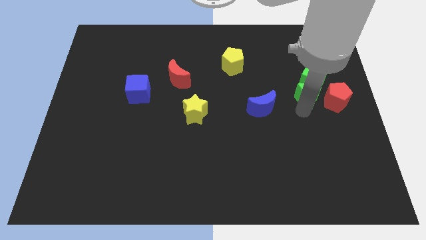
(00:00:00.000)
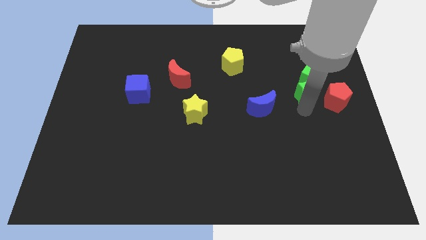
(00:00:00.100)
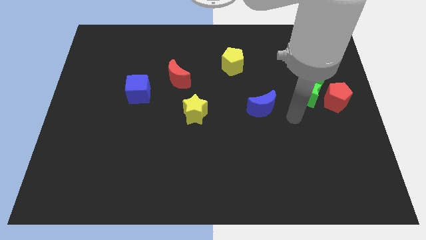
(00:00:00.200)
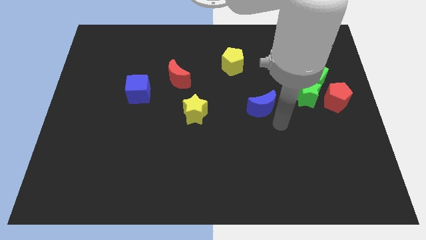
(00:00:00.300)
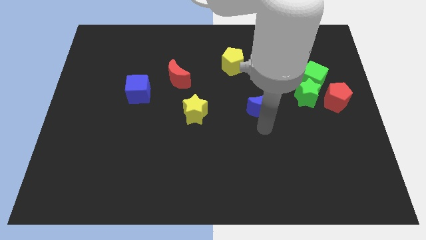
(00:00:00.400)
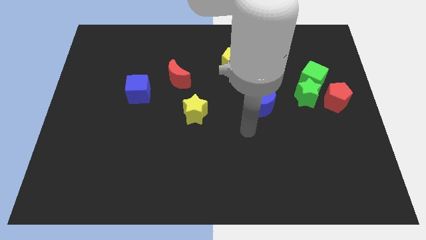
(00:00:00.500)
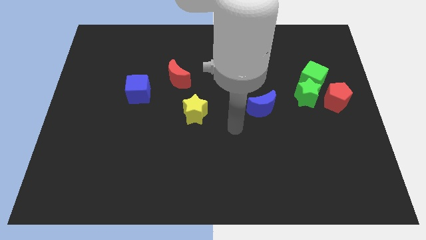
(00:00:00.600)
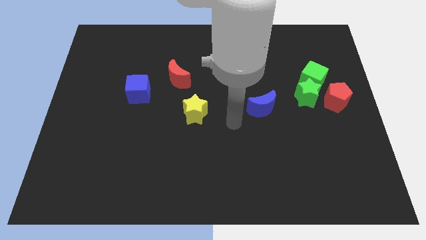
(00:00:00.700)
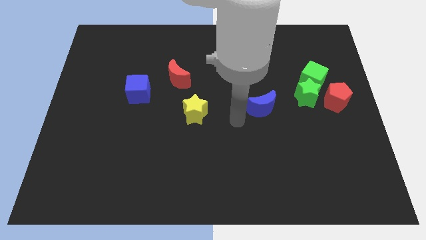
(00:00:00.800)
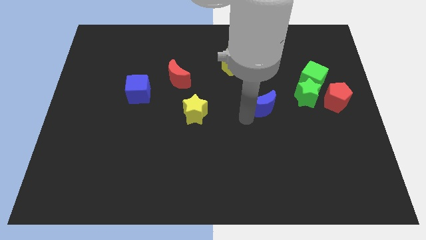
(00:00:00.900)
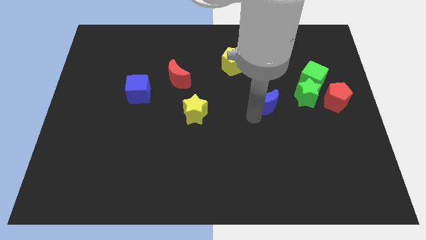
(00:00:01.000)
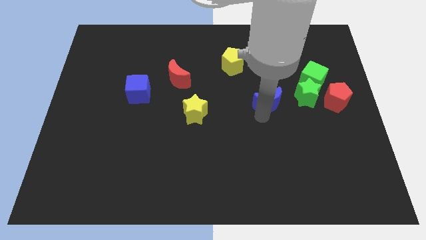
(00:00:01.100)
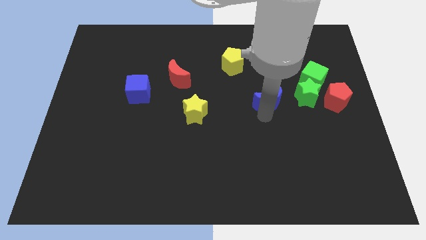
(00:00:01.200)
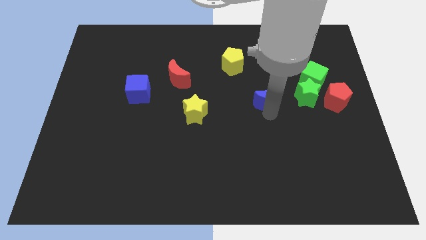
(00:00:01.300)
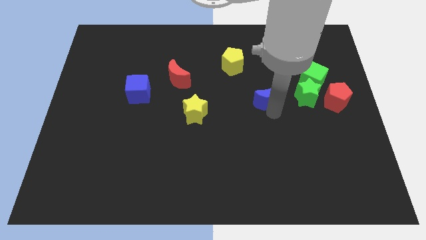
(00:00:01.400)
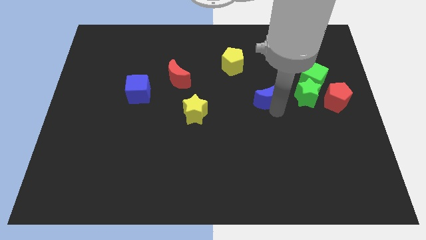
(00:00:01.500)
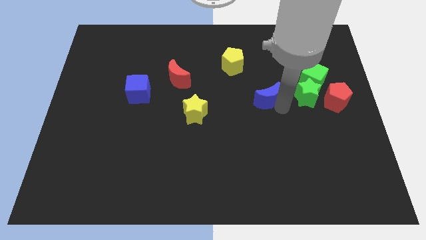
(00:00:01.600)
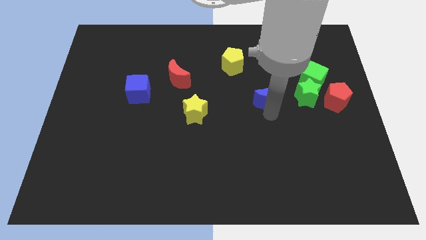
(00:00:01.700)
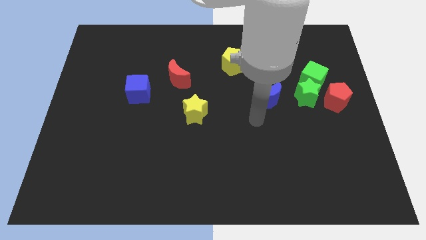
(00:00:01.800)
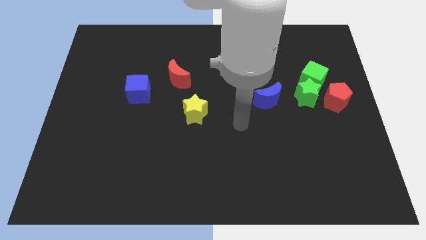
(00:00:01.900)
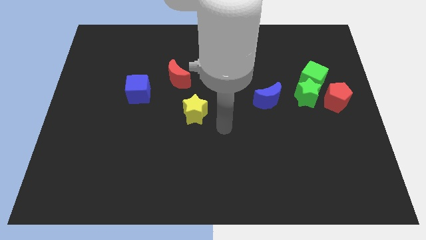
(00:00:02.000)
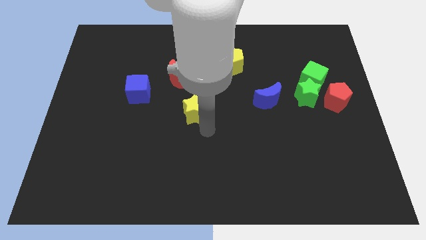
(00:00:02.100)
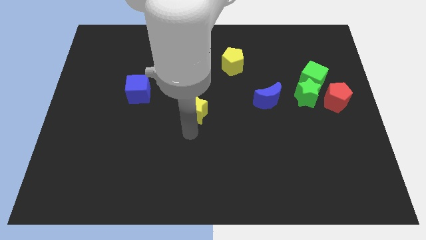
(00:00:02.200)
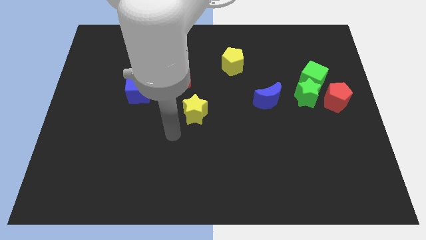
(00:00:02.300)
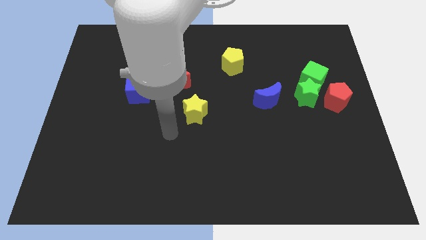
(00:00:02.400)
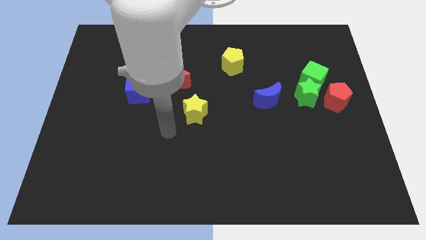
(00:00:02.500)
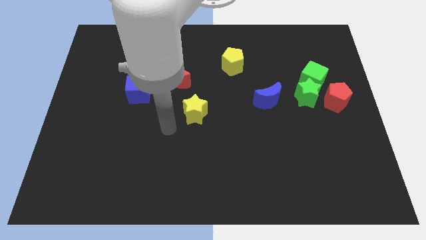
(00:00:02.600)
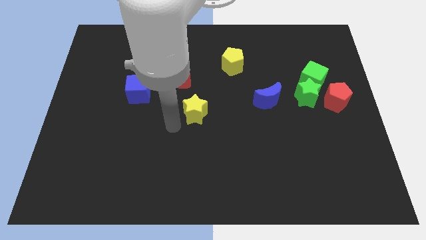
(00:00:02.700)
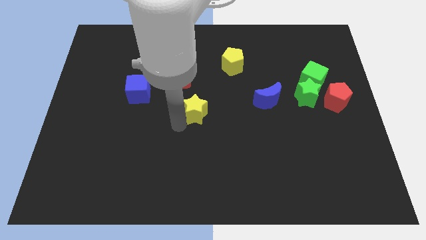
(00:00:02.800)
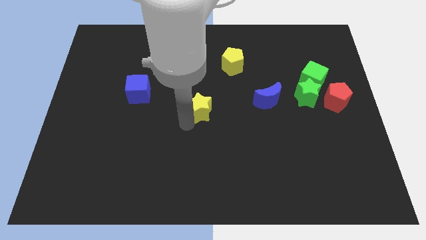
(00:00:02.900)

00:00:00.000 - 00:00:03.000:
move the blue moon slightly to the left of the green star

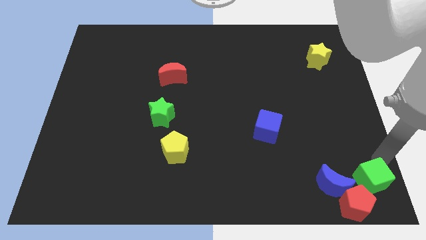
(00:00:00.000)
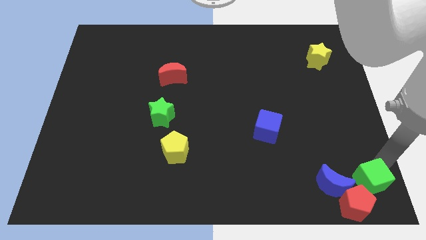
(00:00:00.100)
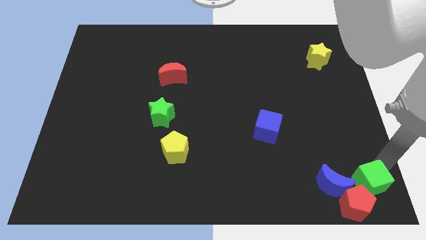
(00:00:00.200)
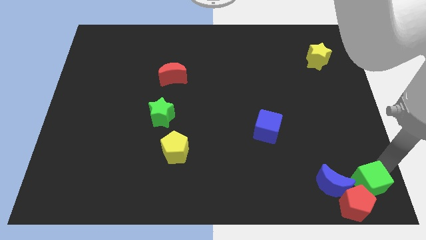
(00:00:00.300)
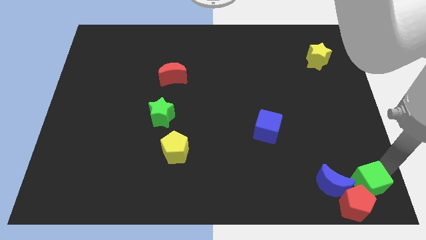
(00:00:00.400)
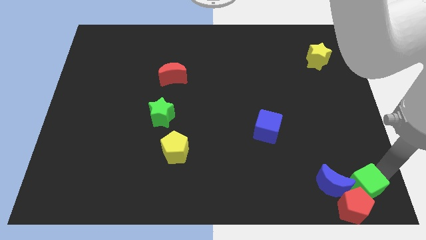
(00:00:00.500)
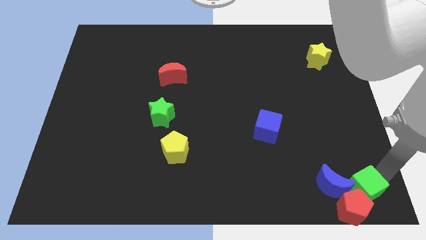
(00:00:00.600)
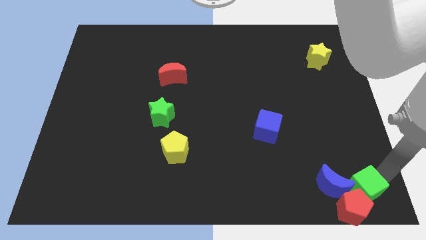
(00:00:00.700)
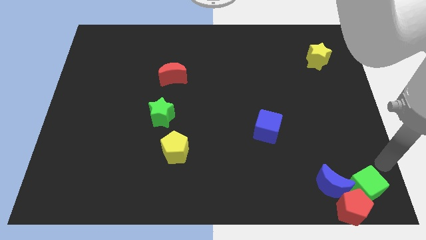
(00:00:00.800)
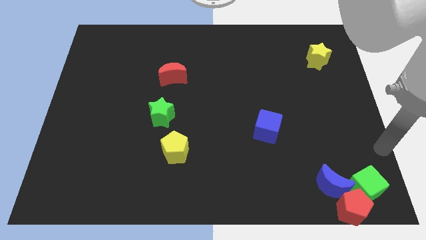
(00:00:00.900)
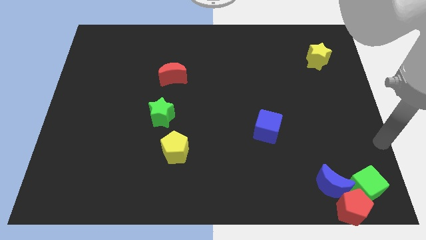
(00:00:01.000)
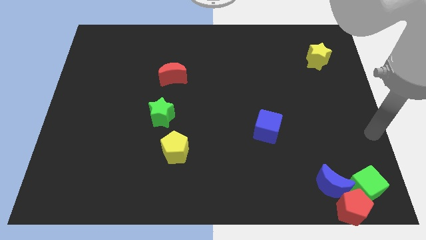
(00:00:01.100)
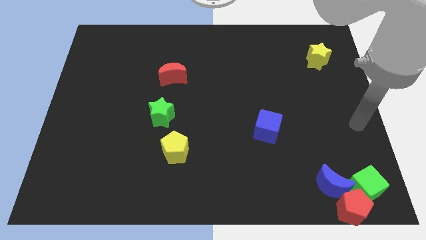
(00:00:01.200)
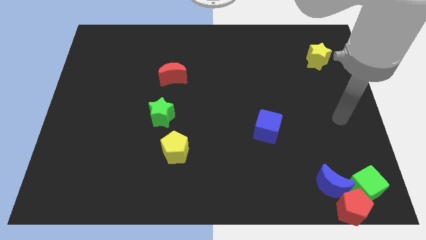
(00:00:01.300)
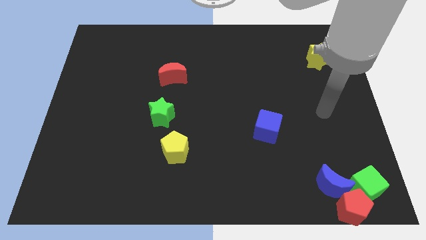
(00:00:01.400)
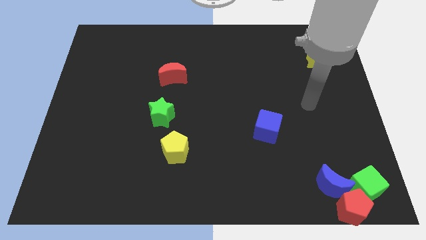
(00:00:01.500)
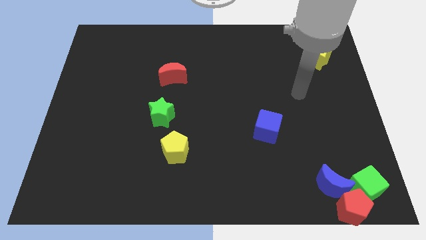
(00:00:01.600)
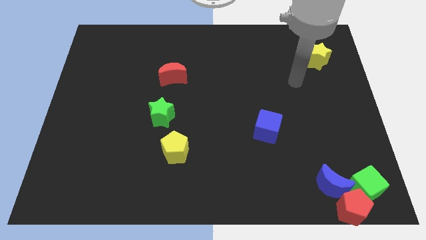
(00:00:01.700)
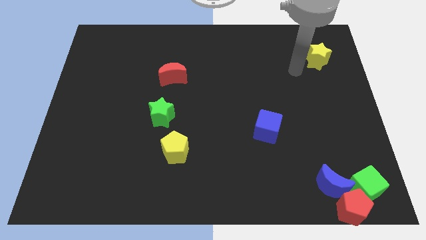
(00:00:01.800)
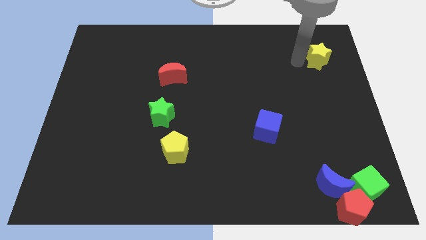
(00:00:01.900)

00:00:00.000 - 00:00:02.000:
touch the left side of the yellow star

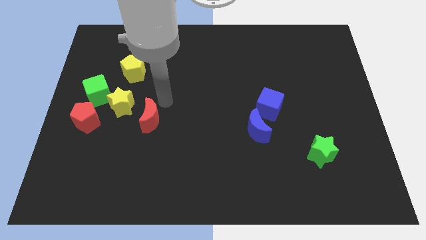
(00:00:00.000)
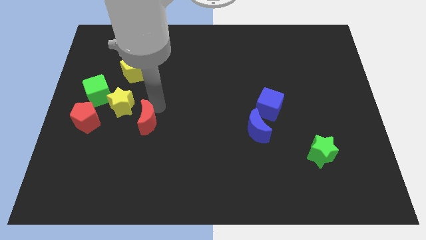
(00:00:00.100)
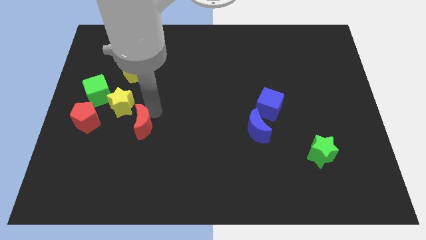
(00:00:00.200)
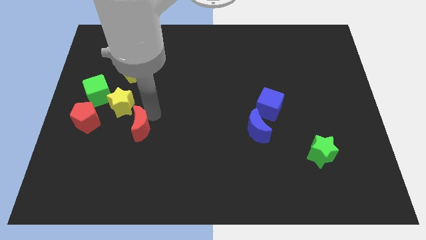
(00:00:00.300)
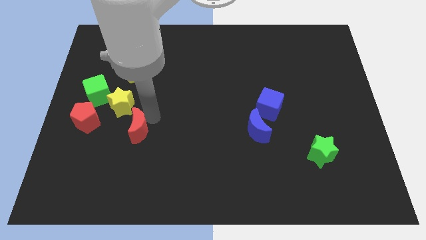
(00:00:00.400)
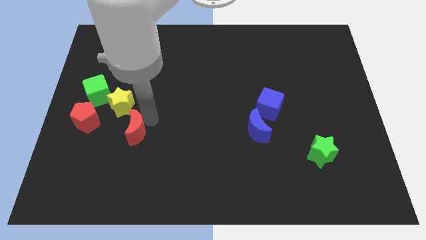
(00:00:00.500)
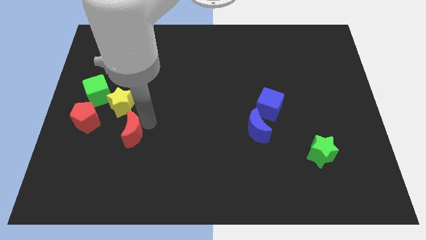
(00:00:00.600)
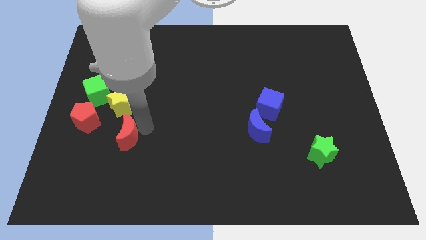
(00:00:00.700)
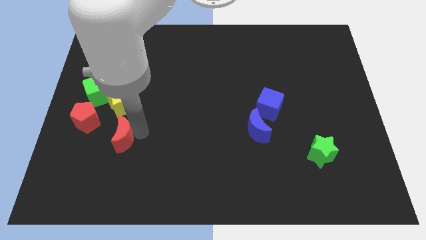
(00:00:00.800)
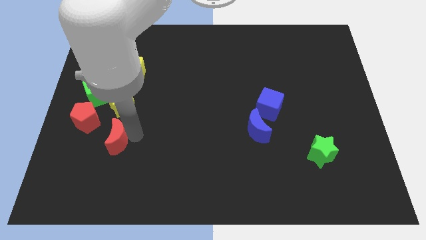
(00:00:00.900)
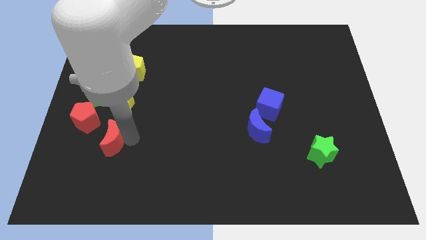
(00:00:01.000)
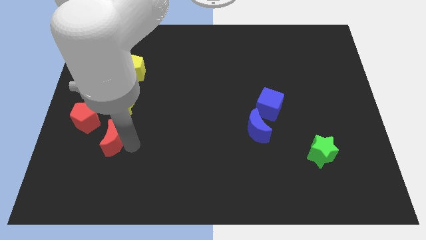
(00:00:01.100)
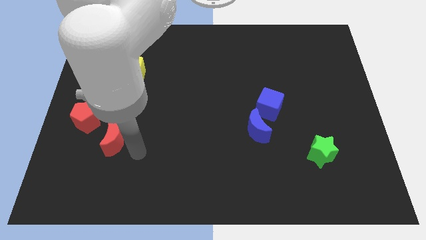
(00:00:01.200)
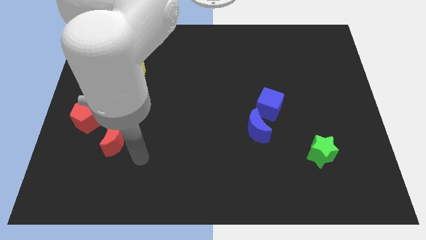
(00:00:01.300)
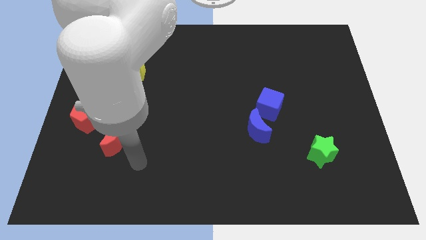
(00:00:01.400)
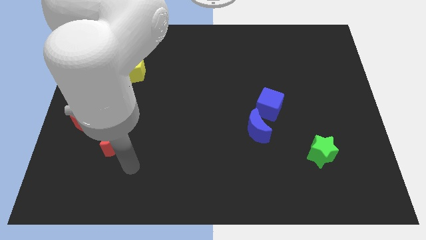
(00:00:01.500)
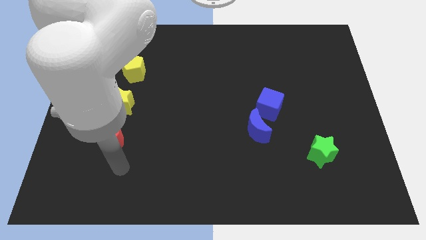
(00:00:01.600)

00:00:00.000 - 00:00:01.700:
place the red moon diagonally to red pentagon

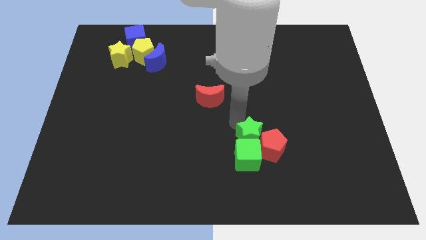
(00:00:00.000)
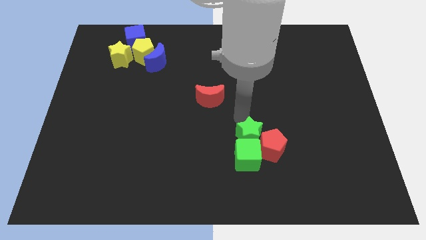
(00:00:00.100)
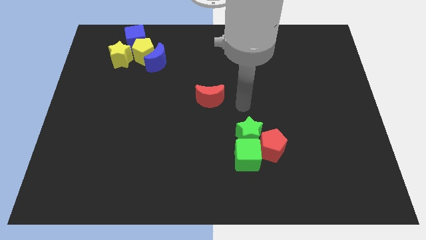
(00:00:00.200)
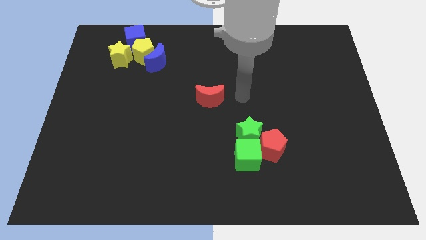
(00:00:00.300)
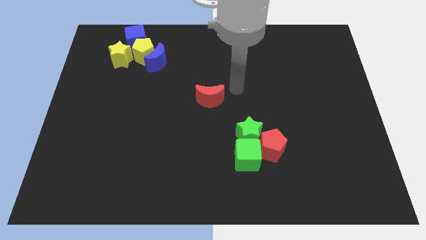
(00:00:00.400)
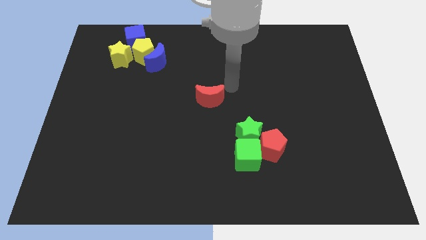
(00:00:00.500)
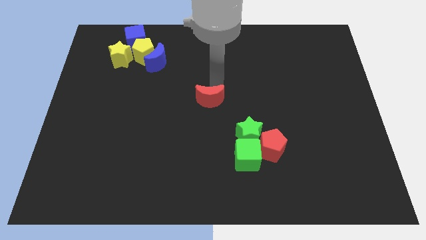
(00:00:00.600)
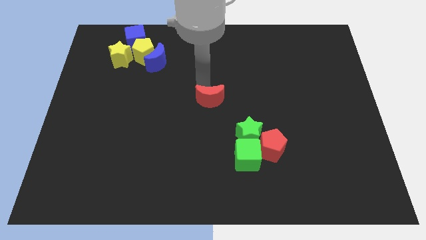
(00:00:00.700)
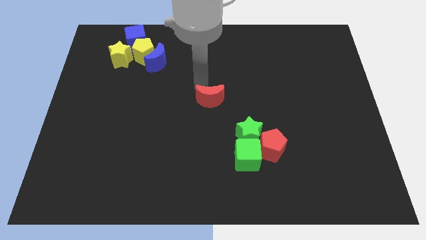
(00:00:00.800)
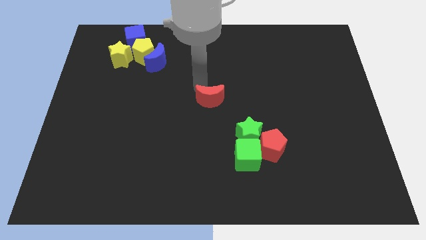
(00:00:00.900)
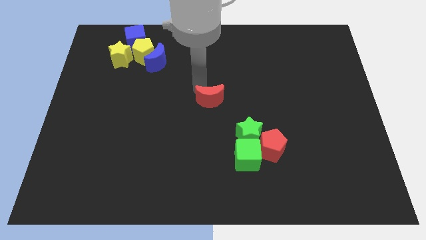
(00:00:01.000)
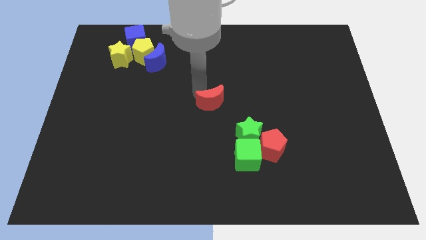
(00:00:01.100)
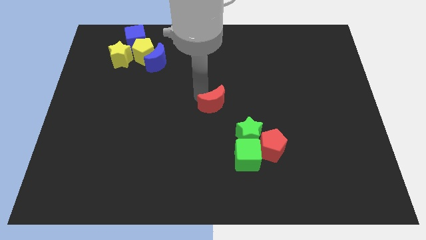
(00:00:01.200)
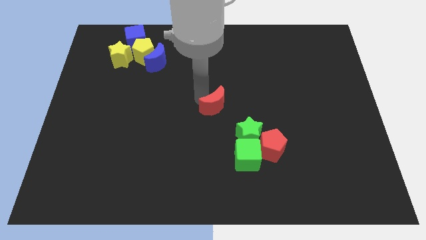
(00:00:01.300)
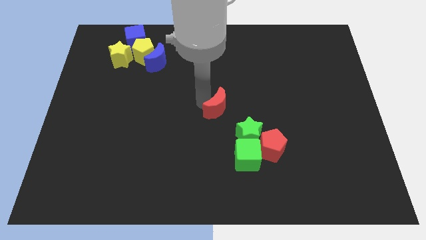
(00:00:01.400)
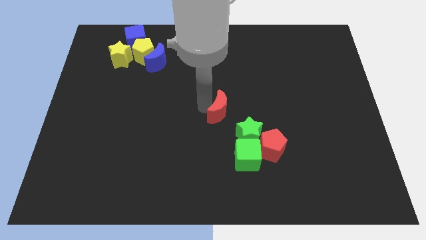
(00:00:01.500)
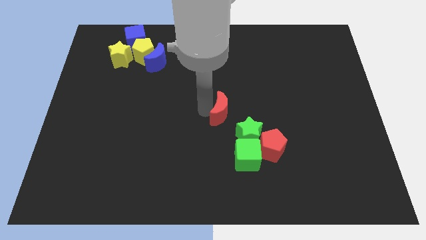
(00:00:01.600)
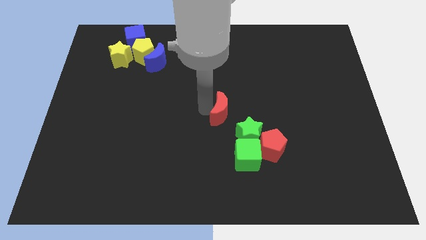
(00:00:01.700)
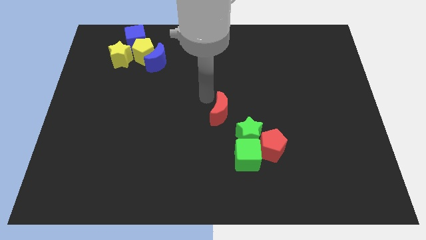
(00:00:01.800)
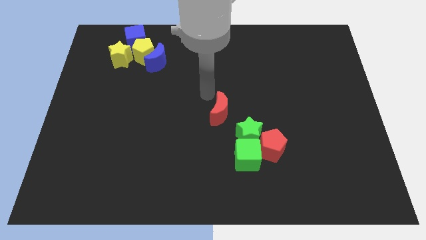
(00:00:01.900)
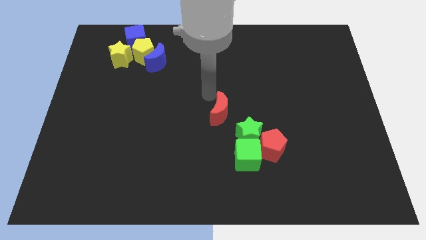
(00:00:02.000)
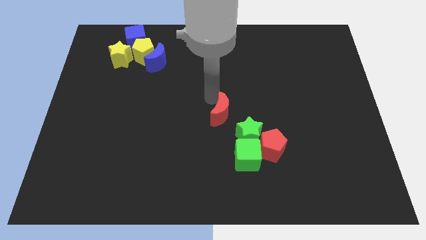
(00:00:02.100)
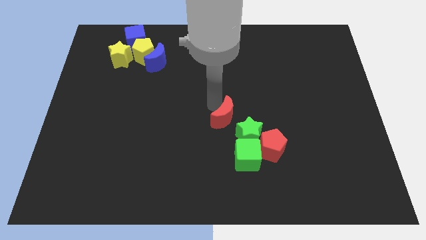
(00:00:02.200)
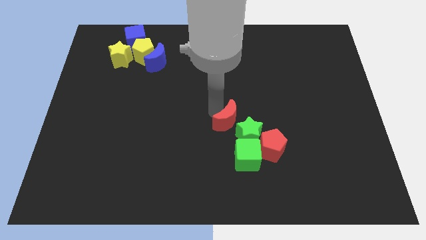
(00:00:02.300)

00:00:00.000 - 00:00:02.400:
move the red crescent to the left of the green star
